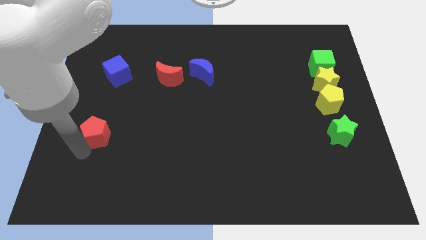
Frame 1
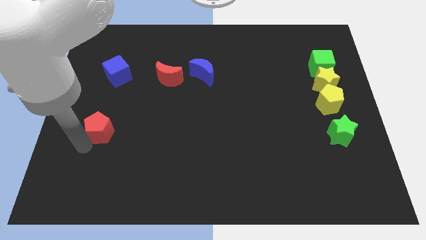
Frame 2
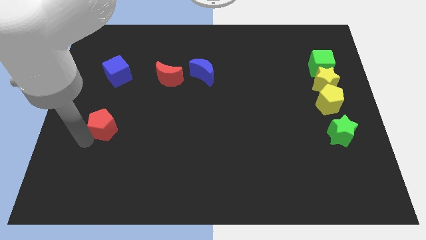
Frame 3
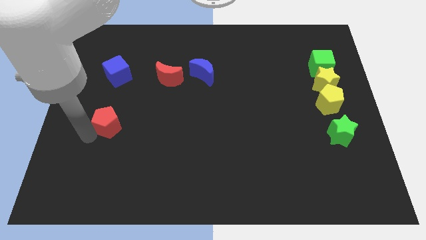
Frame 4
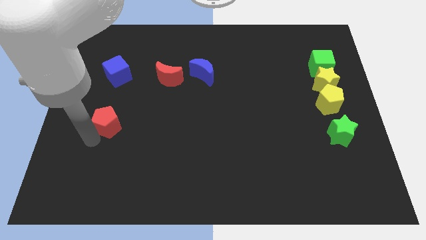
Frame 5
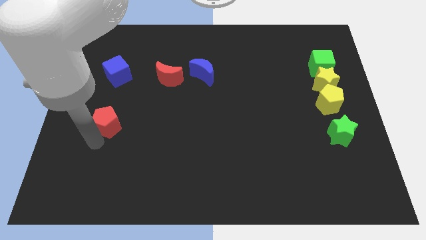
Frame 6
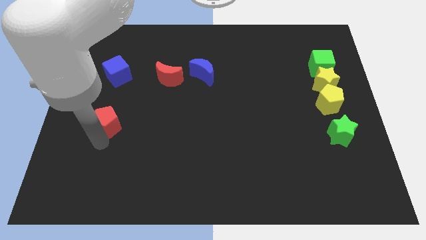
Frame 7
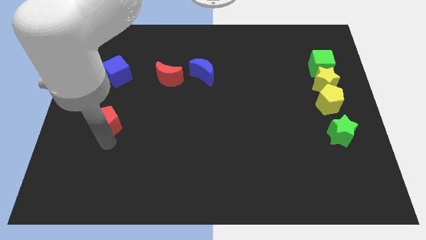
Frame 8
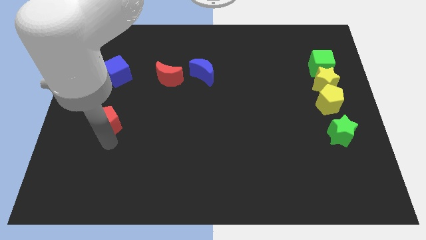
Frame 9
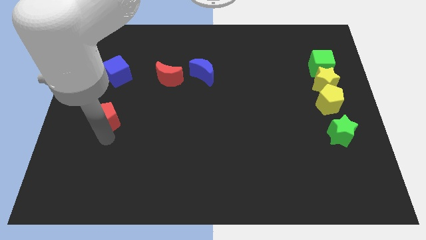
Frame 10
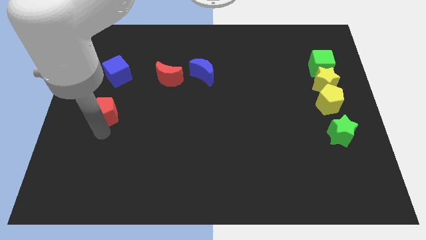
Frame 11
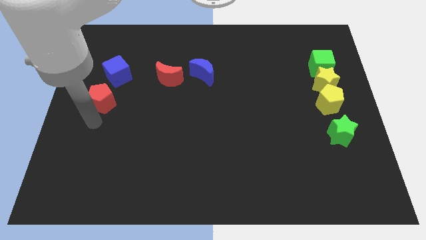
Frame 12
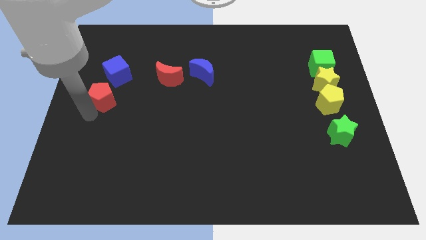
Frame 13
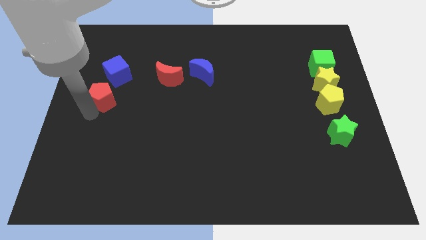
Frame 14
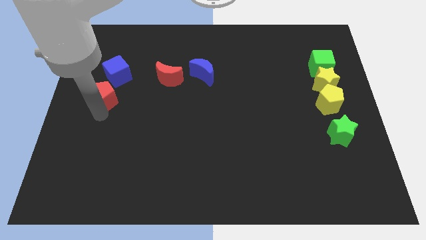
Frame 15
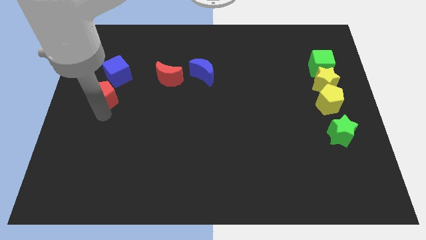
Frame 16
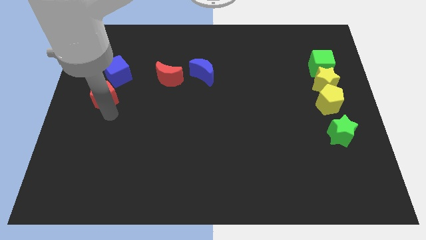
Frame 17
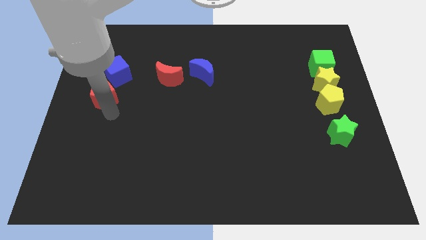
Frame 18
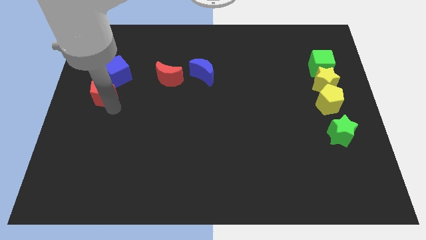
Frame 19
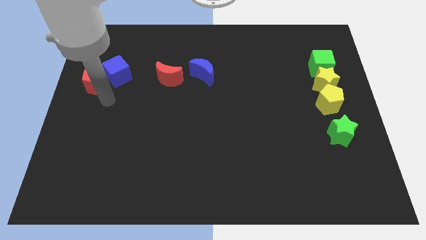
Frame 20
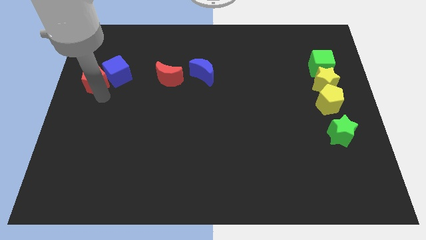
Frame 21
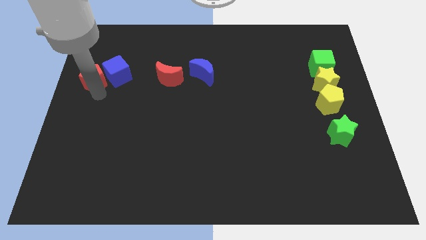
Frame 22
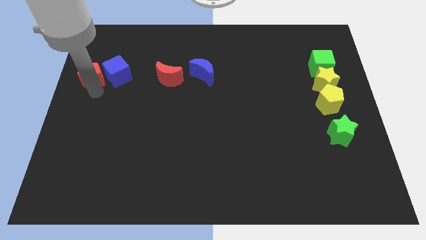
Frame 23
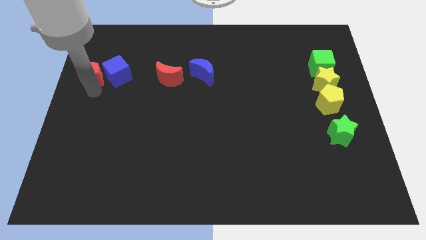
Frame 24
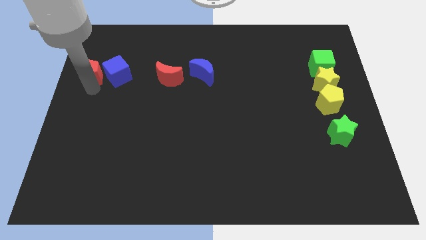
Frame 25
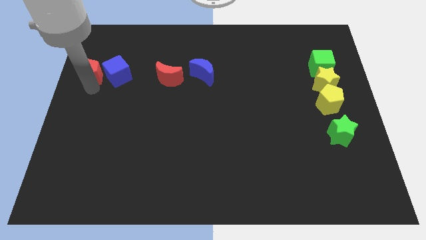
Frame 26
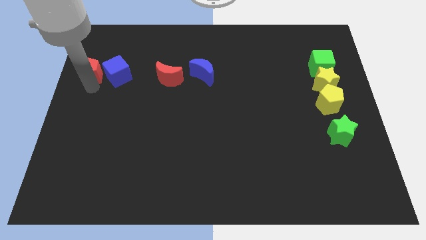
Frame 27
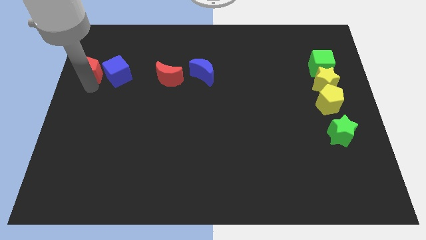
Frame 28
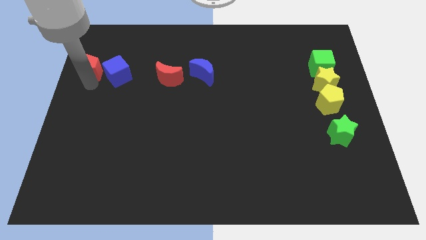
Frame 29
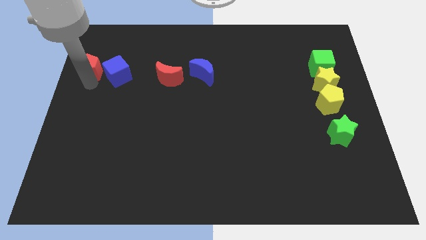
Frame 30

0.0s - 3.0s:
place red pentagon to the left of blue cube

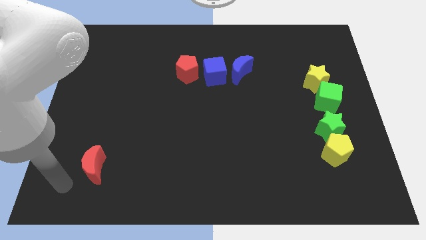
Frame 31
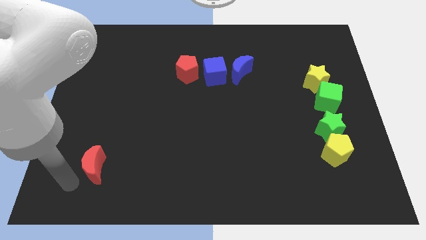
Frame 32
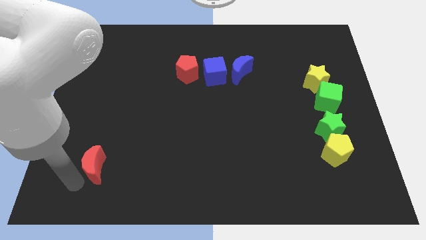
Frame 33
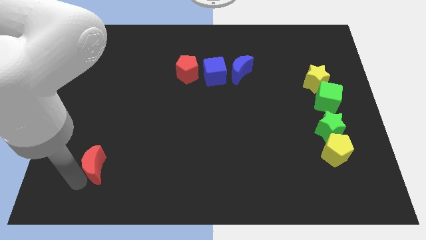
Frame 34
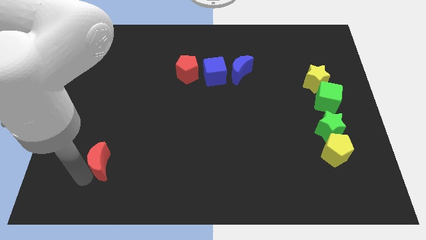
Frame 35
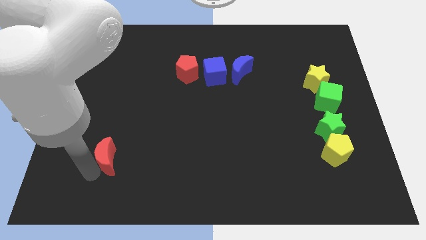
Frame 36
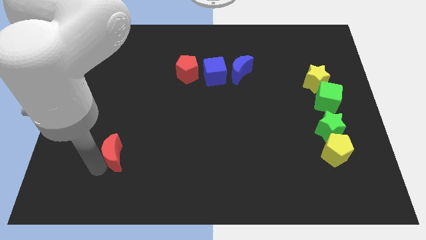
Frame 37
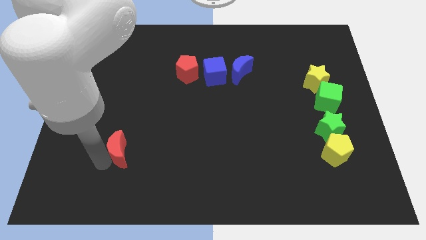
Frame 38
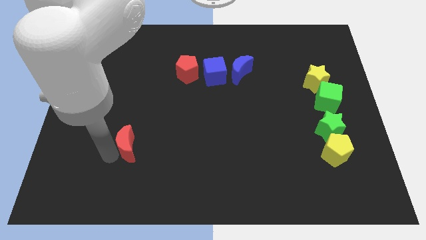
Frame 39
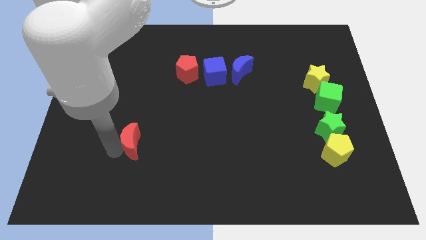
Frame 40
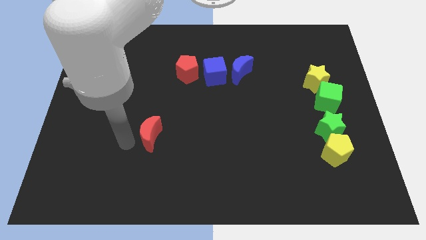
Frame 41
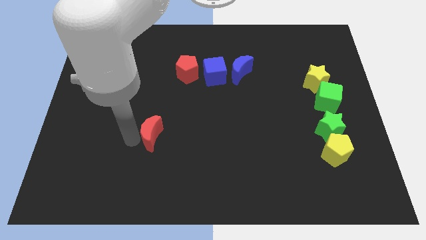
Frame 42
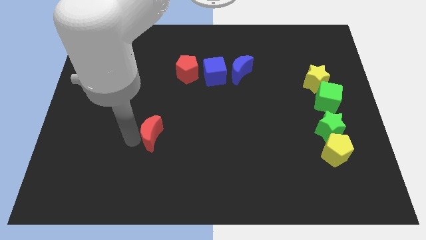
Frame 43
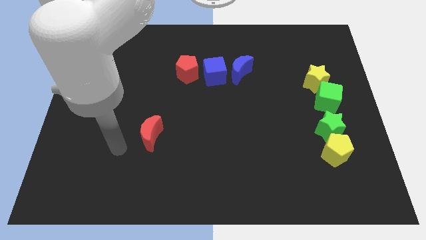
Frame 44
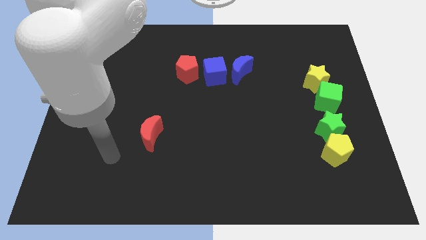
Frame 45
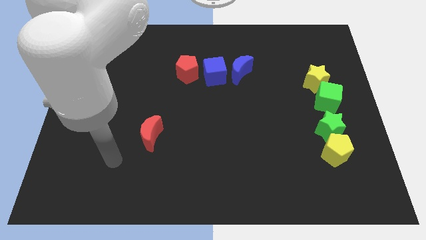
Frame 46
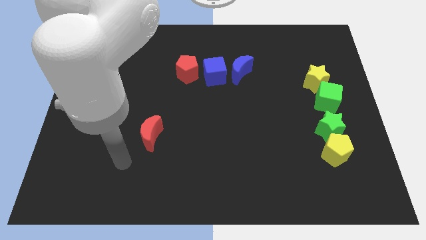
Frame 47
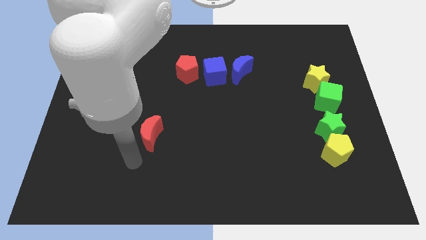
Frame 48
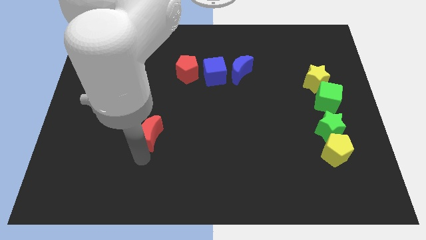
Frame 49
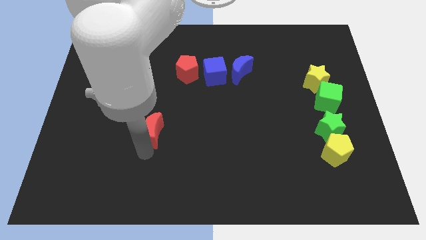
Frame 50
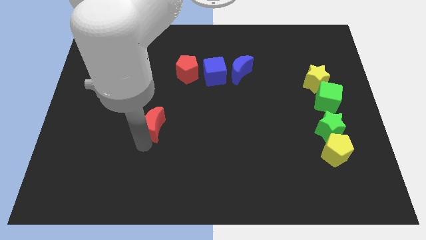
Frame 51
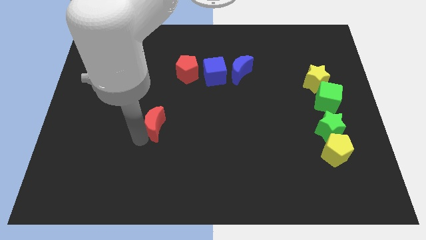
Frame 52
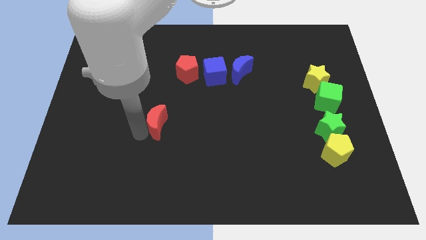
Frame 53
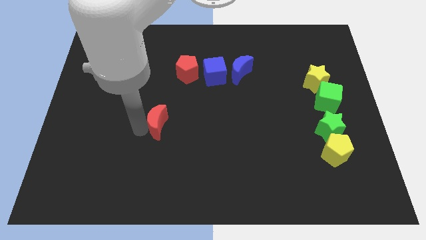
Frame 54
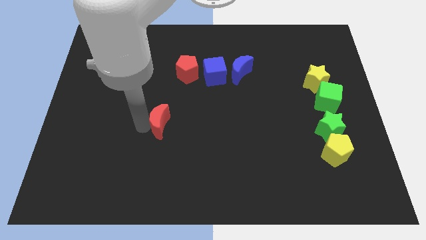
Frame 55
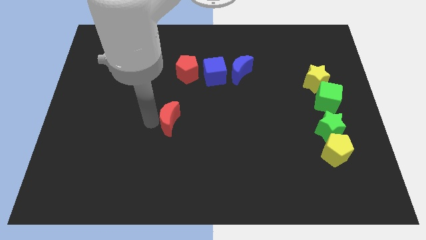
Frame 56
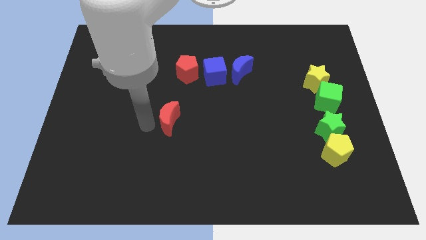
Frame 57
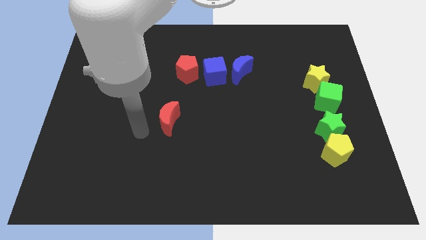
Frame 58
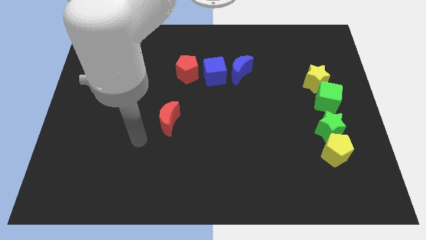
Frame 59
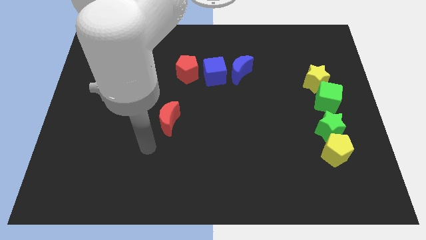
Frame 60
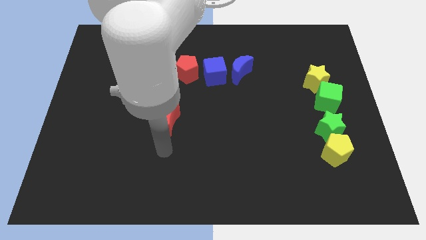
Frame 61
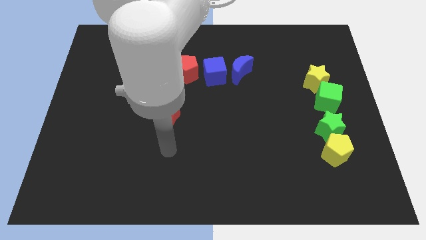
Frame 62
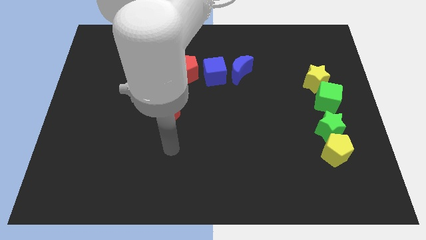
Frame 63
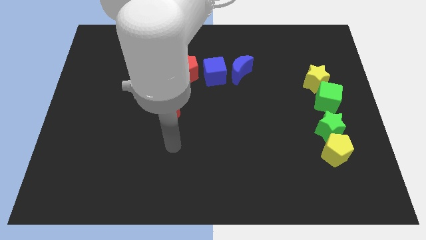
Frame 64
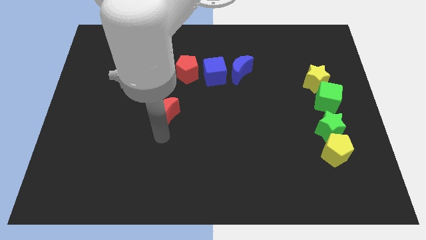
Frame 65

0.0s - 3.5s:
push the red pentagon towards the center of the board

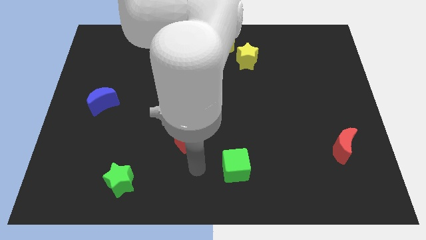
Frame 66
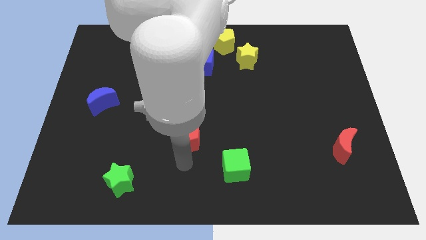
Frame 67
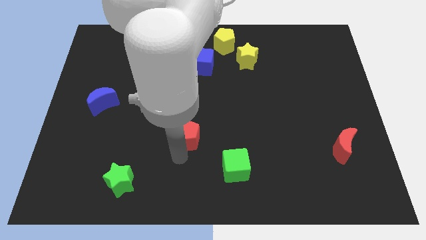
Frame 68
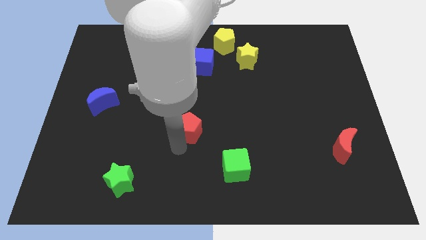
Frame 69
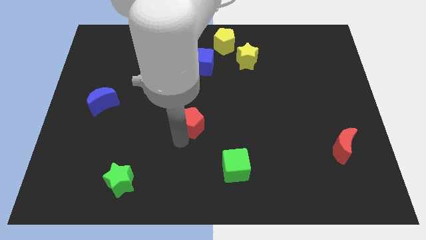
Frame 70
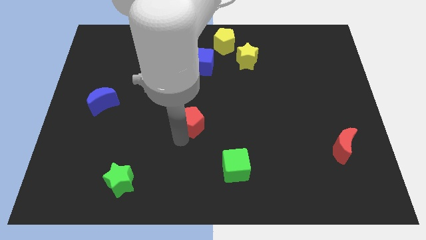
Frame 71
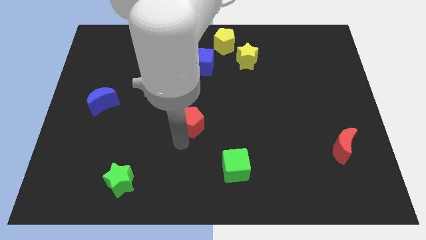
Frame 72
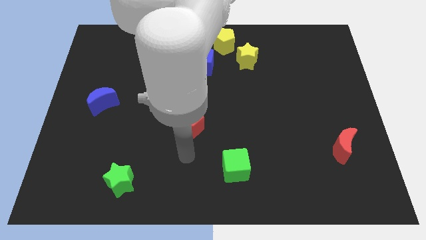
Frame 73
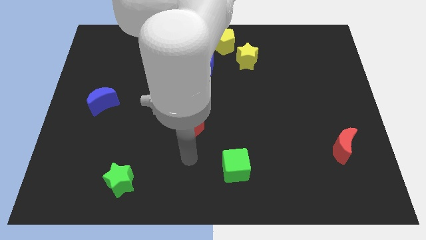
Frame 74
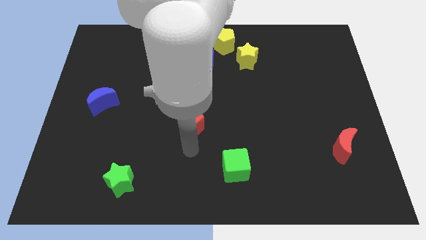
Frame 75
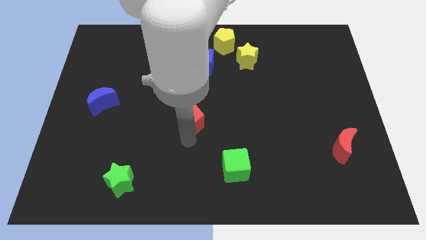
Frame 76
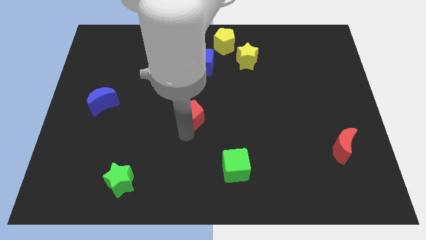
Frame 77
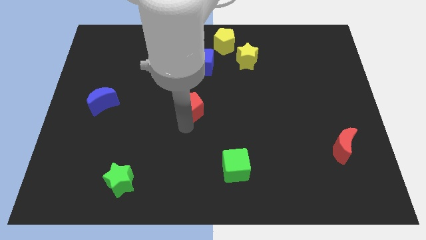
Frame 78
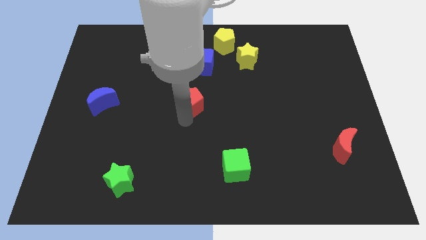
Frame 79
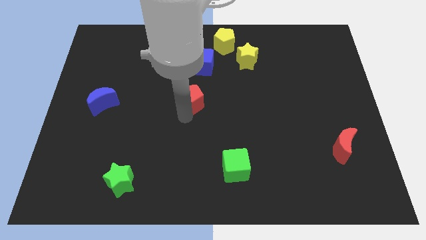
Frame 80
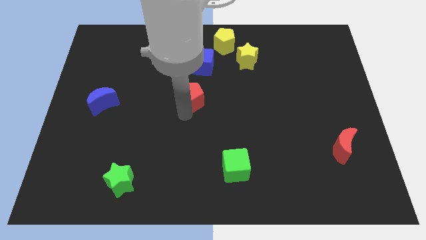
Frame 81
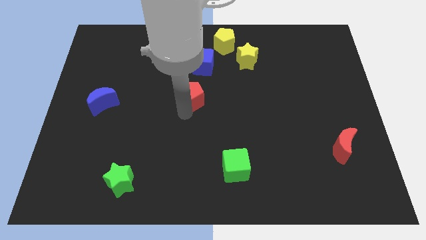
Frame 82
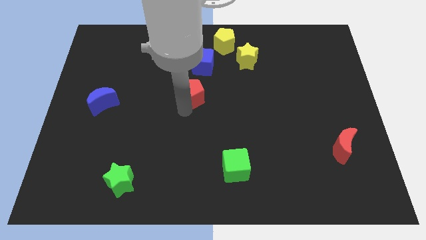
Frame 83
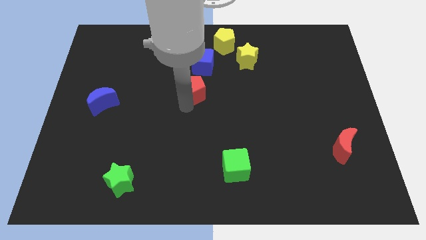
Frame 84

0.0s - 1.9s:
push the red pentagon to the top

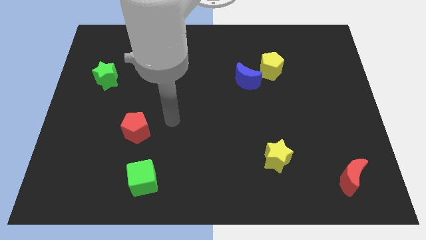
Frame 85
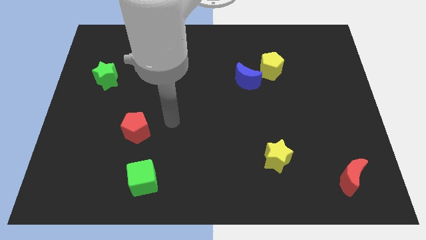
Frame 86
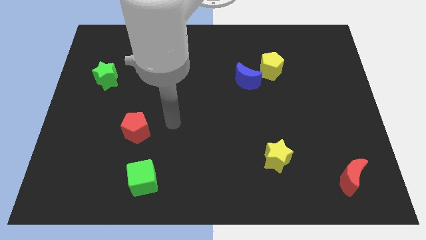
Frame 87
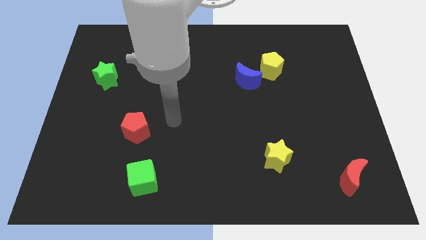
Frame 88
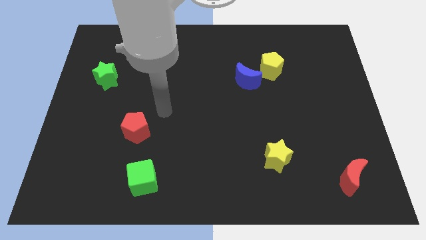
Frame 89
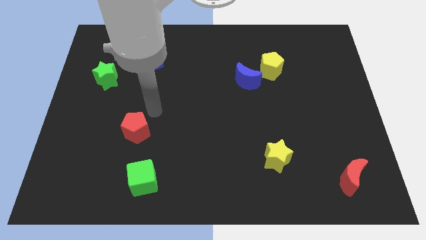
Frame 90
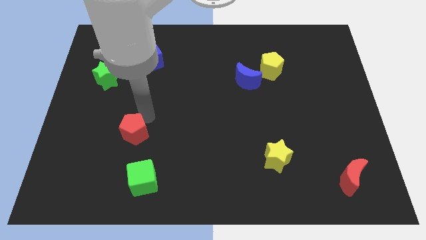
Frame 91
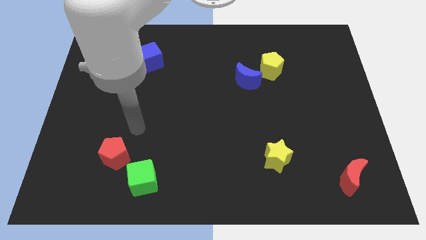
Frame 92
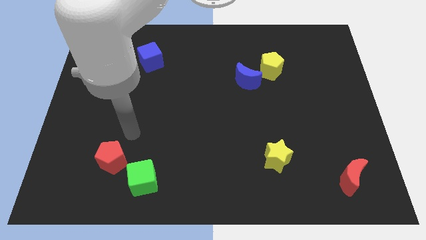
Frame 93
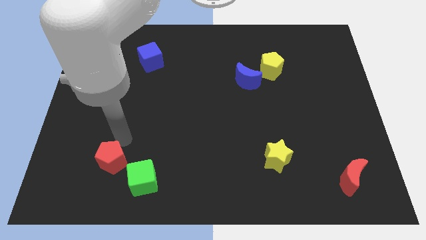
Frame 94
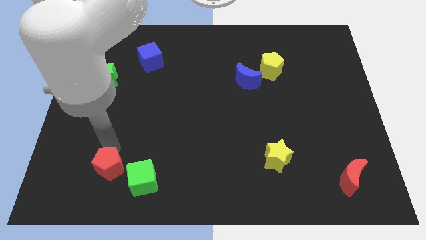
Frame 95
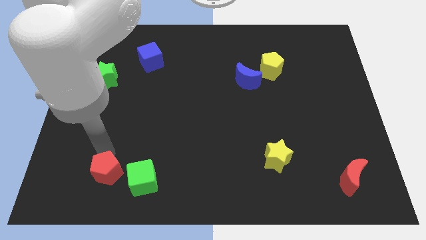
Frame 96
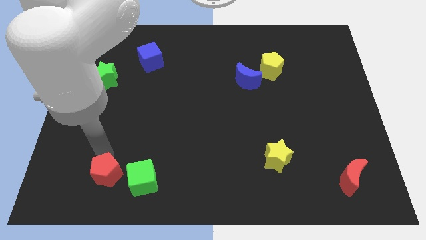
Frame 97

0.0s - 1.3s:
push the red pentagon towards the bottom of the board
